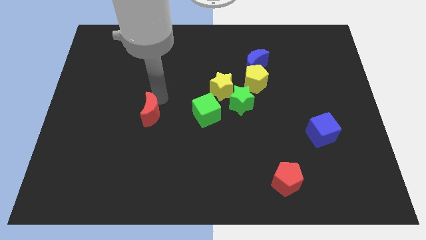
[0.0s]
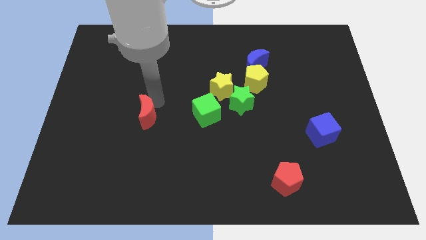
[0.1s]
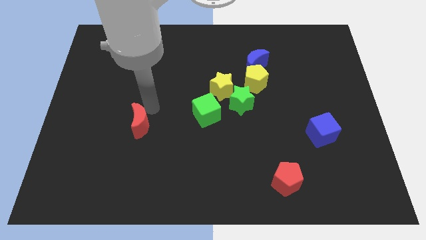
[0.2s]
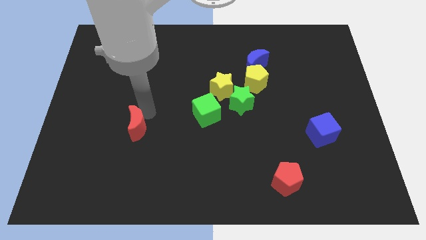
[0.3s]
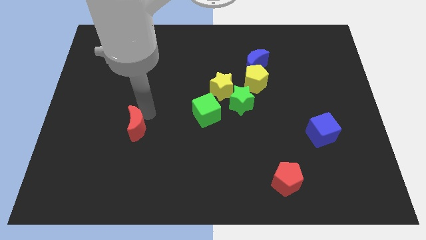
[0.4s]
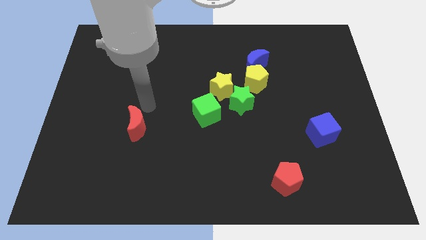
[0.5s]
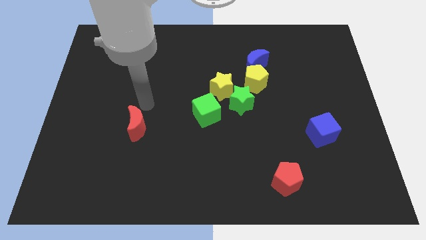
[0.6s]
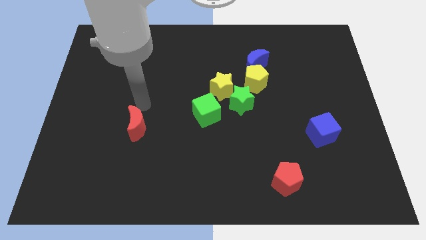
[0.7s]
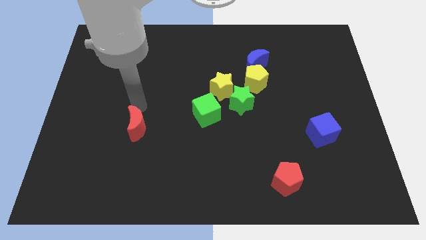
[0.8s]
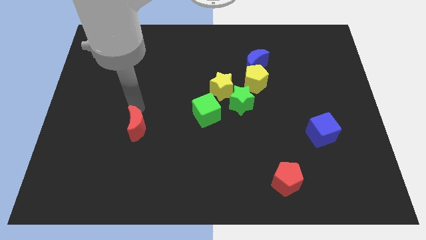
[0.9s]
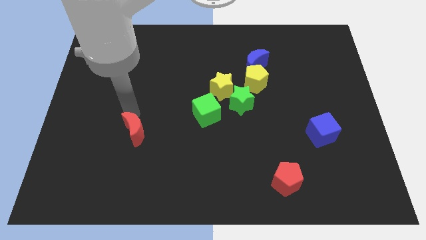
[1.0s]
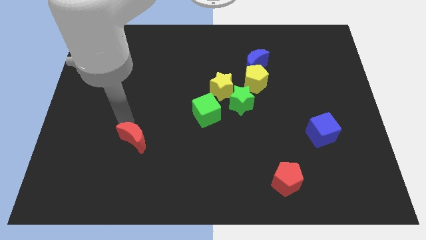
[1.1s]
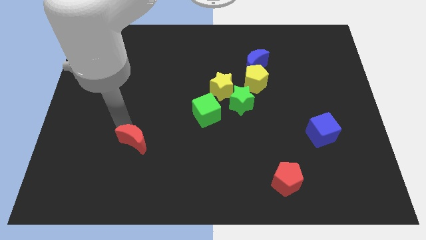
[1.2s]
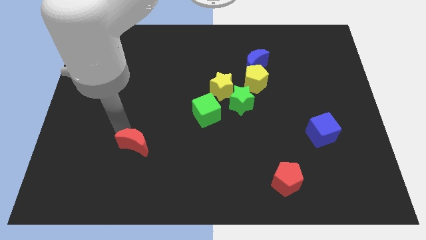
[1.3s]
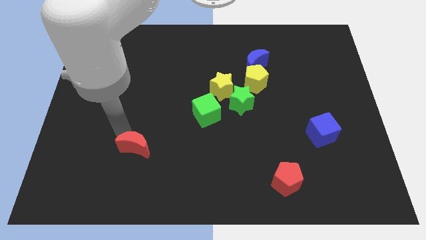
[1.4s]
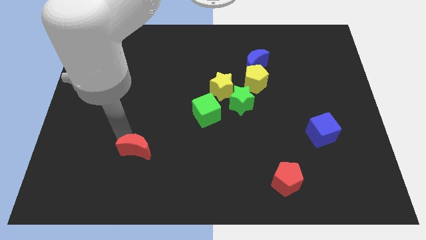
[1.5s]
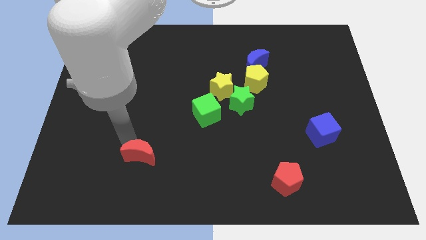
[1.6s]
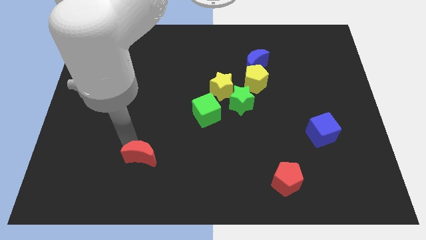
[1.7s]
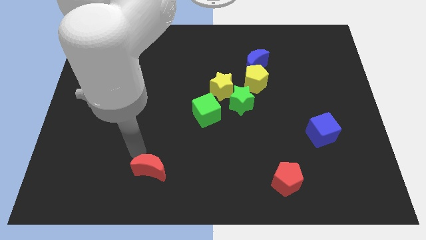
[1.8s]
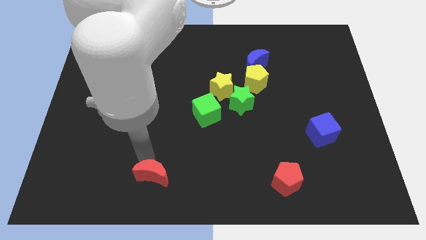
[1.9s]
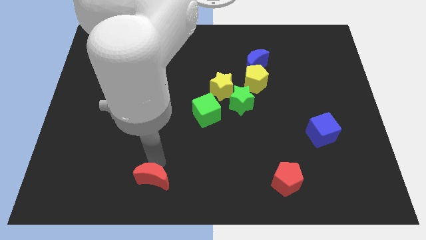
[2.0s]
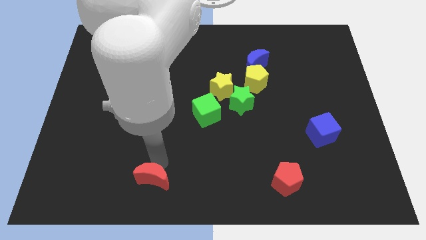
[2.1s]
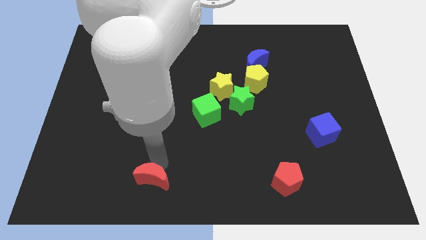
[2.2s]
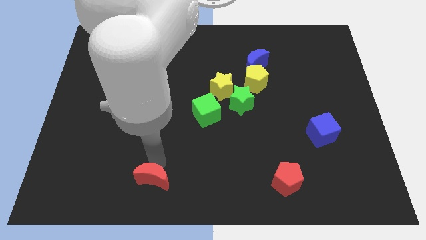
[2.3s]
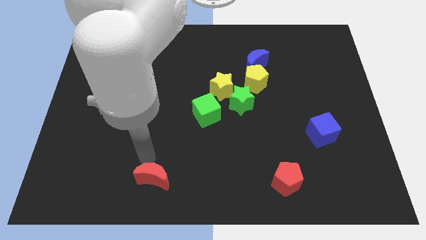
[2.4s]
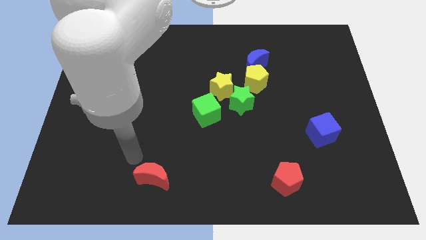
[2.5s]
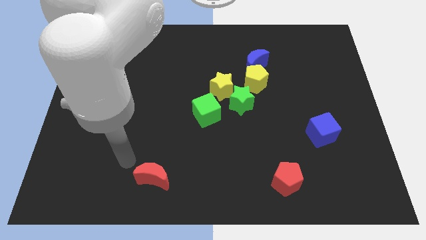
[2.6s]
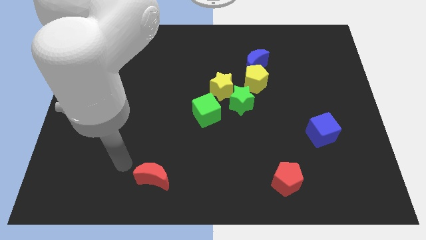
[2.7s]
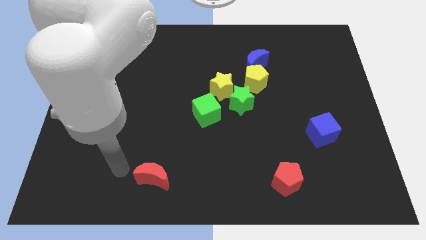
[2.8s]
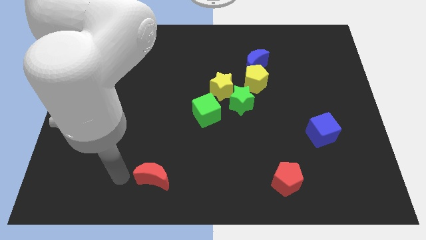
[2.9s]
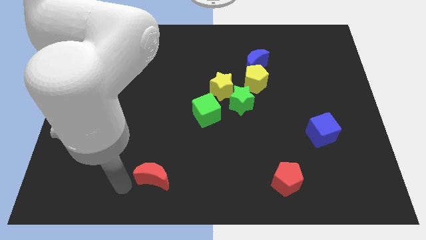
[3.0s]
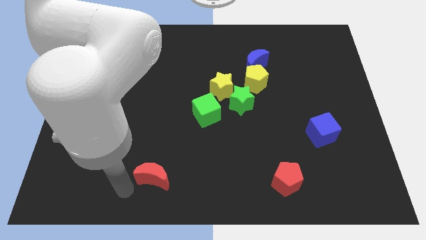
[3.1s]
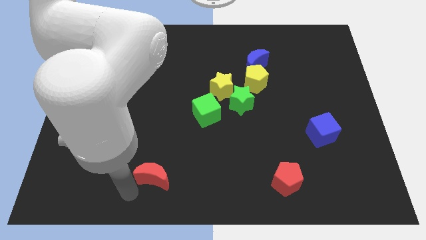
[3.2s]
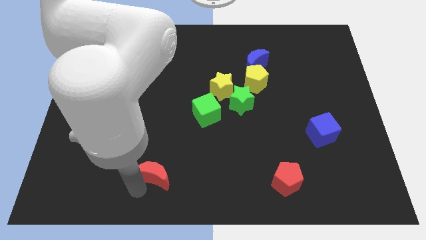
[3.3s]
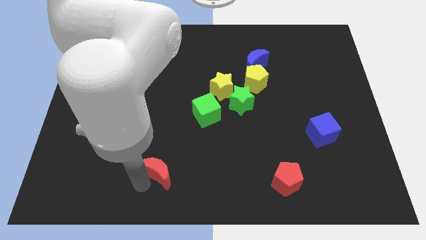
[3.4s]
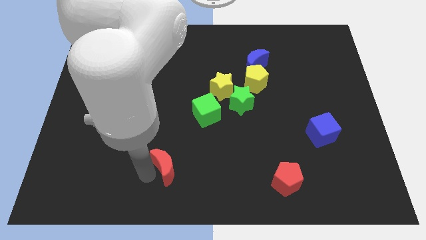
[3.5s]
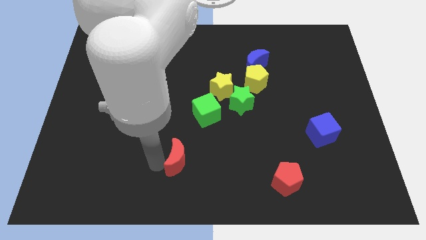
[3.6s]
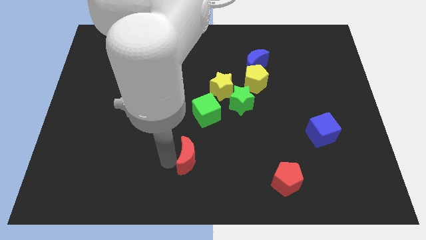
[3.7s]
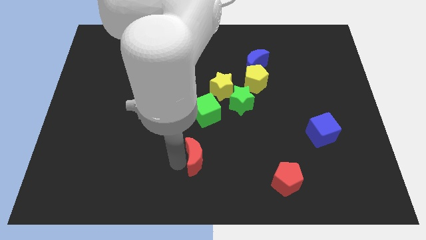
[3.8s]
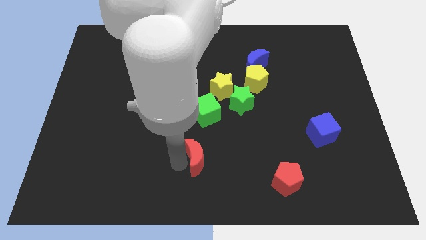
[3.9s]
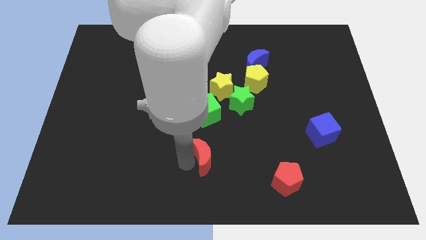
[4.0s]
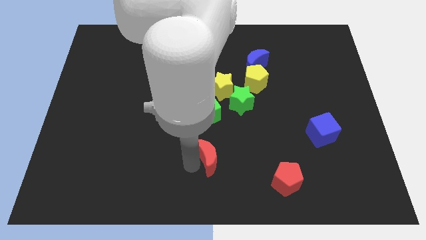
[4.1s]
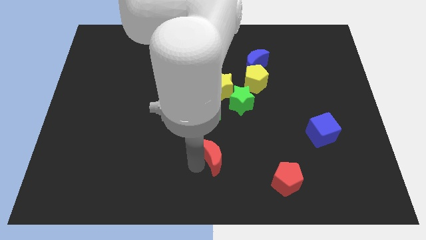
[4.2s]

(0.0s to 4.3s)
place the red moon below the green cube

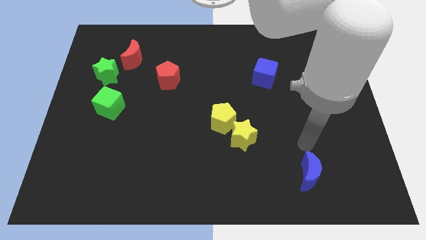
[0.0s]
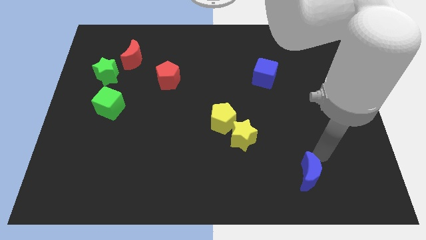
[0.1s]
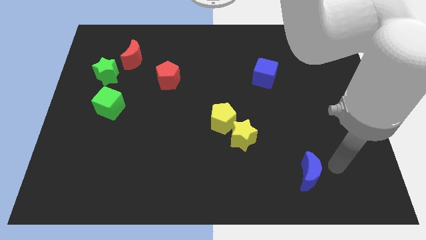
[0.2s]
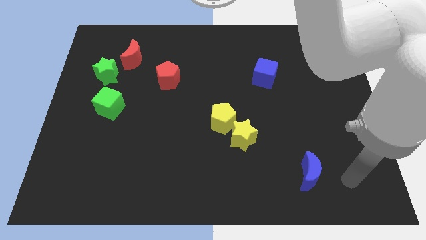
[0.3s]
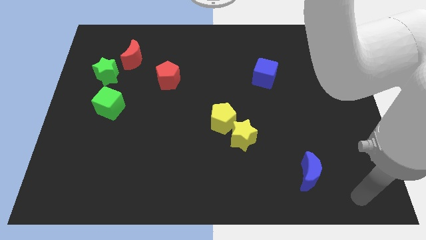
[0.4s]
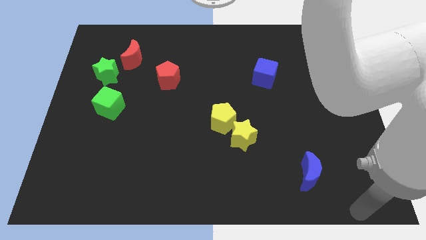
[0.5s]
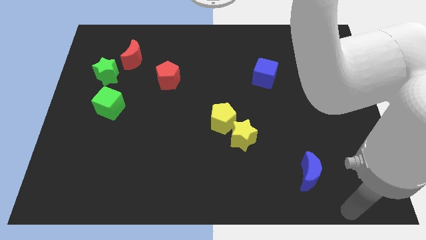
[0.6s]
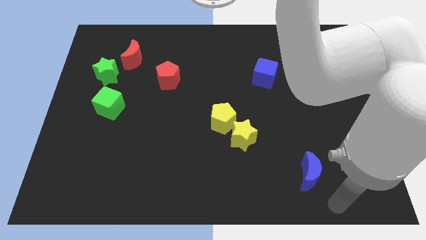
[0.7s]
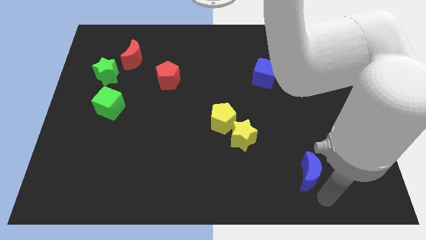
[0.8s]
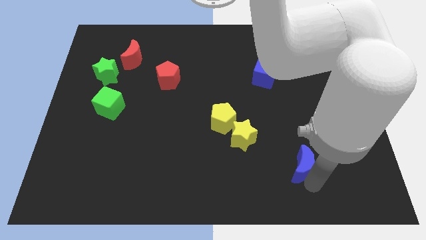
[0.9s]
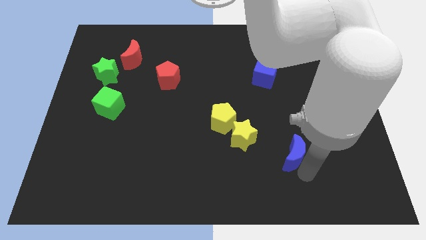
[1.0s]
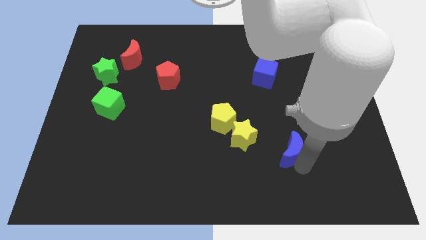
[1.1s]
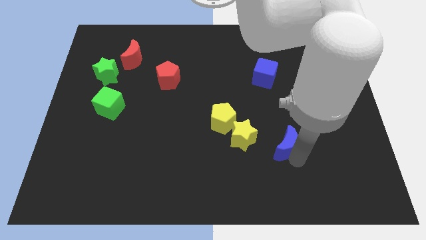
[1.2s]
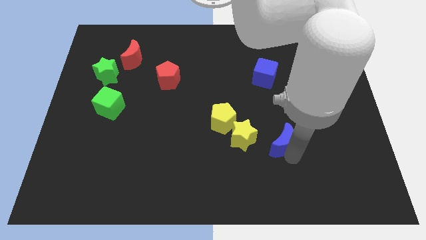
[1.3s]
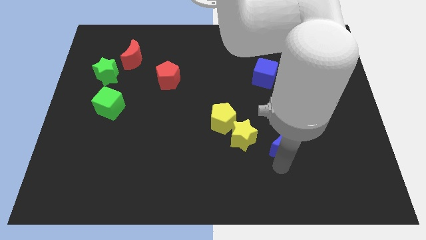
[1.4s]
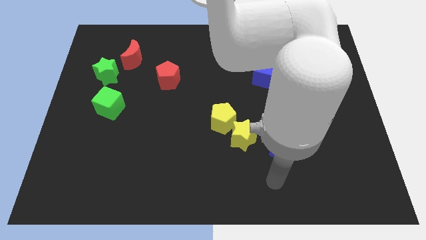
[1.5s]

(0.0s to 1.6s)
move the blue crescent right to the yellow star

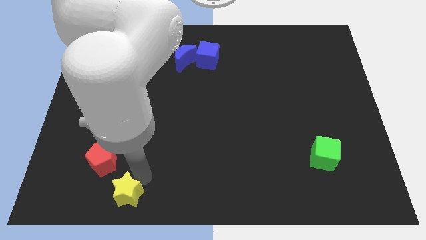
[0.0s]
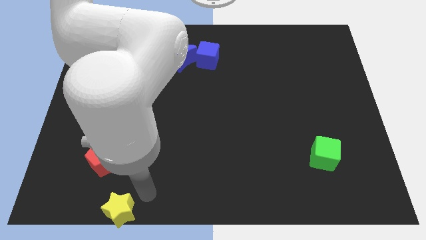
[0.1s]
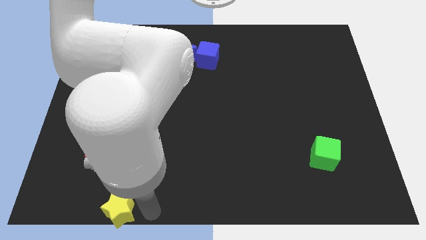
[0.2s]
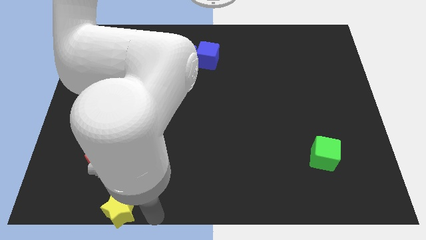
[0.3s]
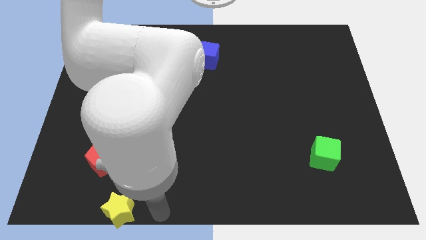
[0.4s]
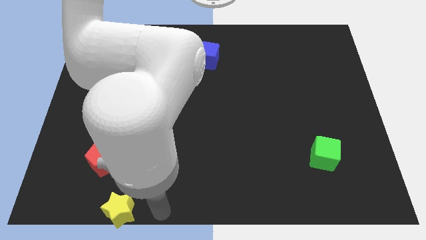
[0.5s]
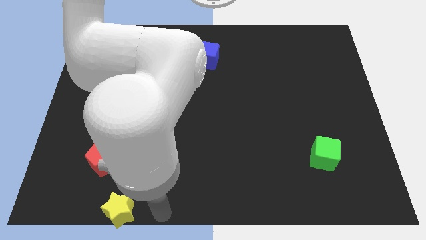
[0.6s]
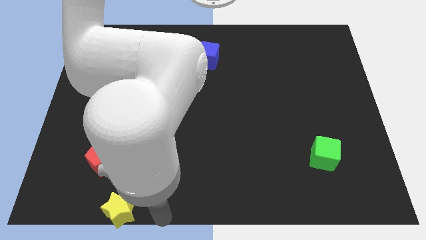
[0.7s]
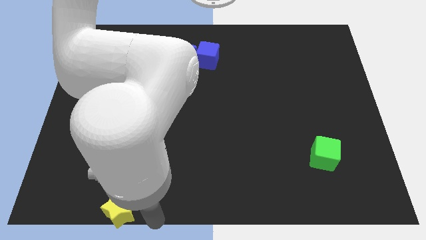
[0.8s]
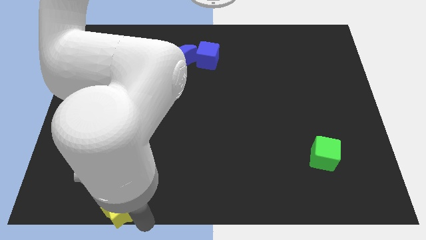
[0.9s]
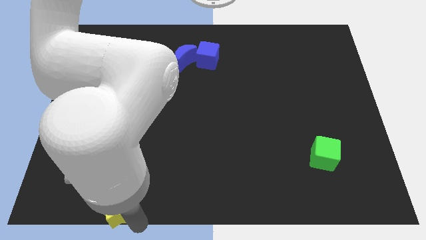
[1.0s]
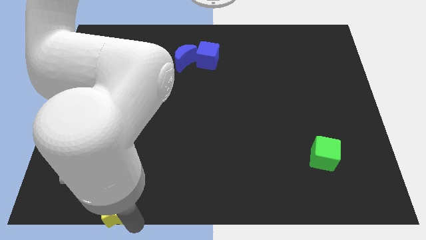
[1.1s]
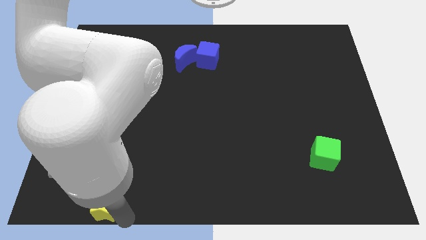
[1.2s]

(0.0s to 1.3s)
put the yellow star below the red pentagon

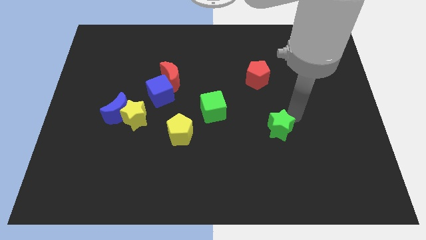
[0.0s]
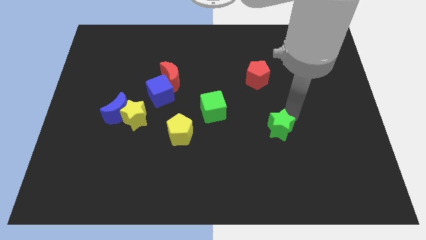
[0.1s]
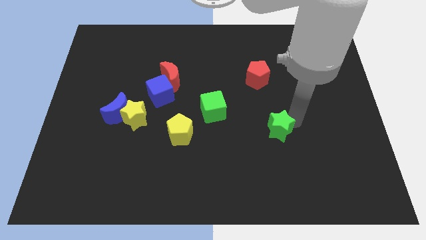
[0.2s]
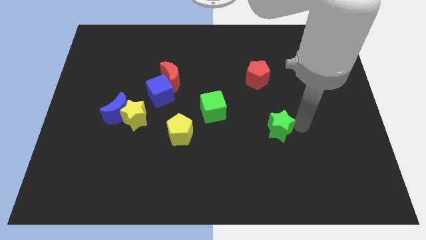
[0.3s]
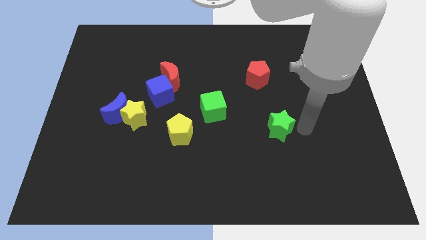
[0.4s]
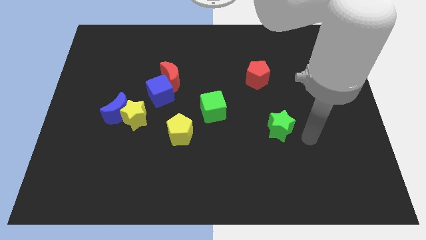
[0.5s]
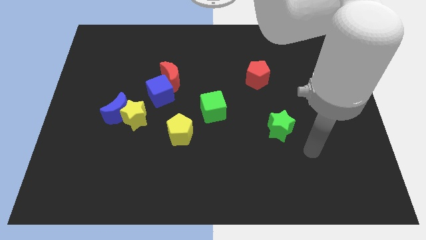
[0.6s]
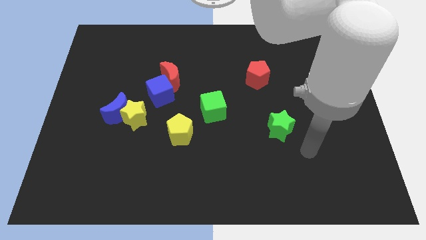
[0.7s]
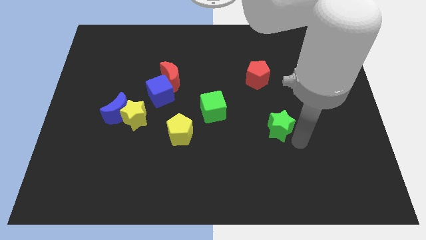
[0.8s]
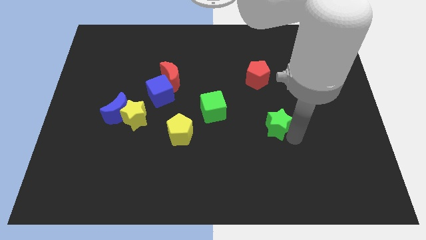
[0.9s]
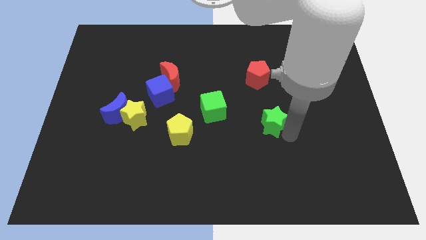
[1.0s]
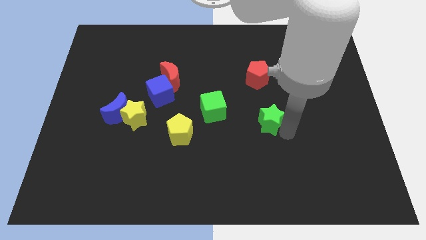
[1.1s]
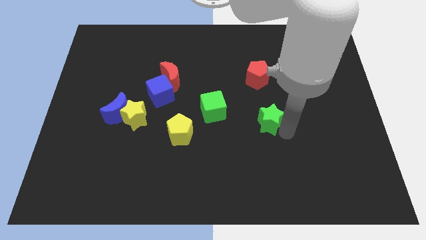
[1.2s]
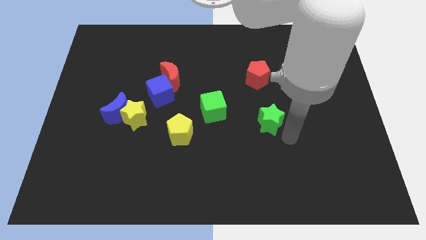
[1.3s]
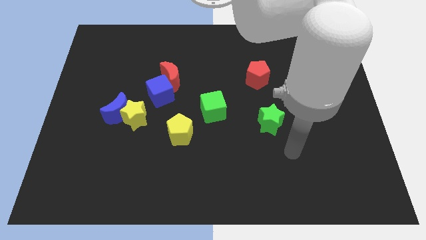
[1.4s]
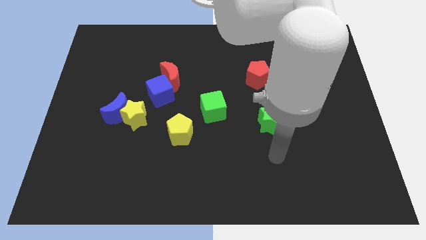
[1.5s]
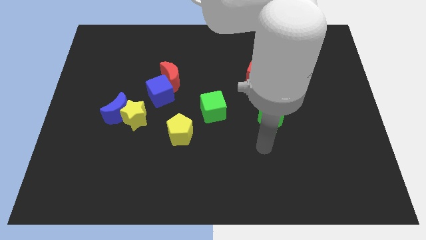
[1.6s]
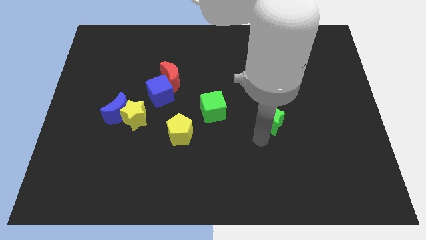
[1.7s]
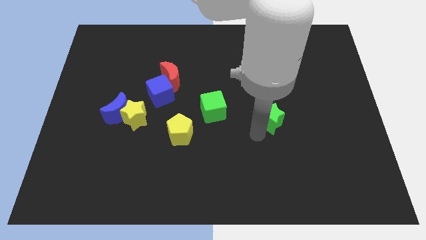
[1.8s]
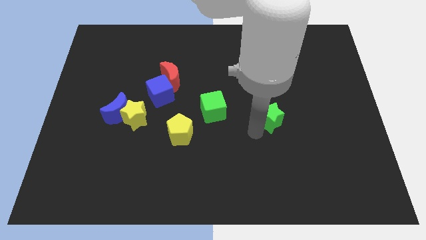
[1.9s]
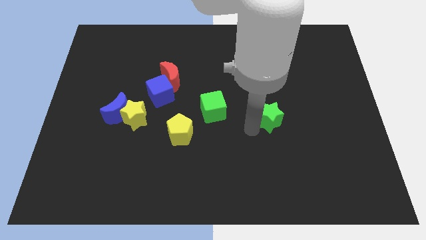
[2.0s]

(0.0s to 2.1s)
move the green star to the right of the green cube
